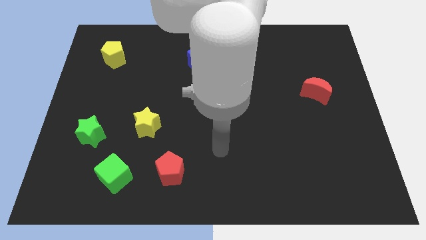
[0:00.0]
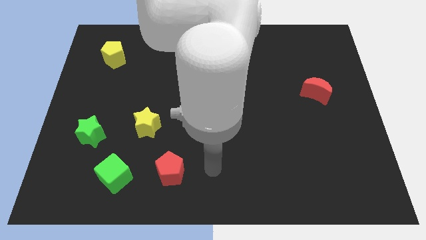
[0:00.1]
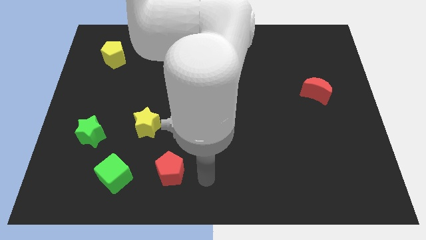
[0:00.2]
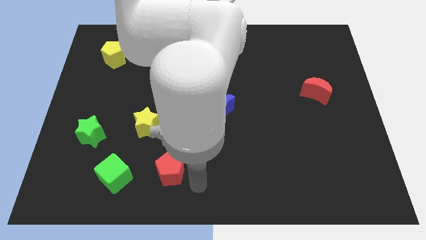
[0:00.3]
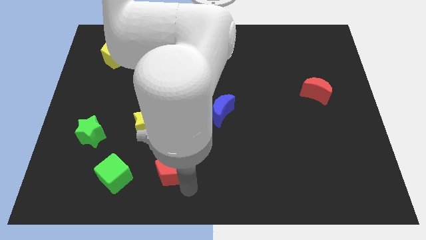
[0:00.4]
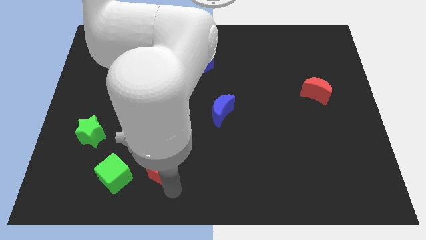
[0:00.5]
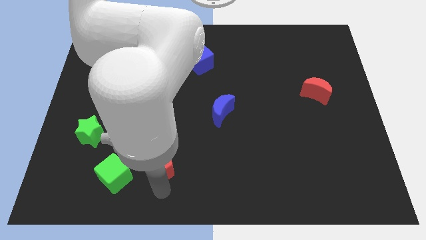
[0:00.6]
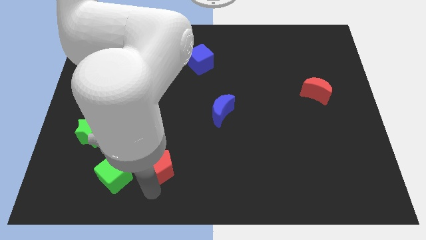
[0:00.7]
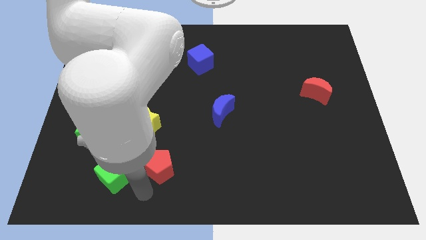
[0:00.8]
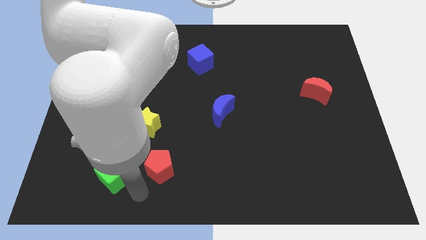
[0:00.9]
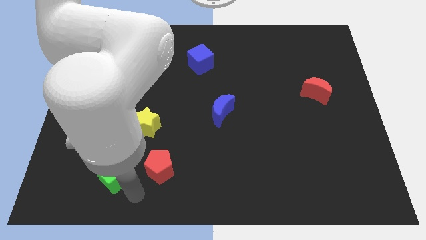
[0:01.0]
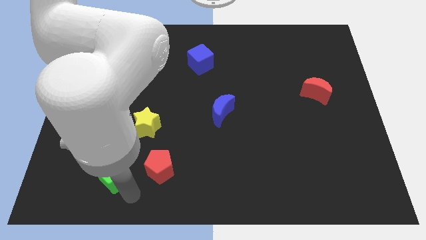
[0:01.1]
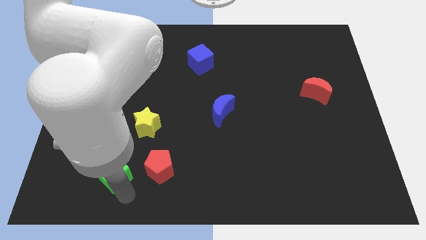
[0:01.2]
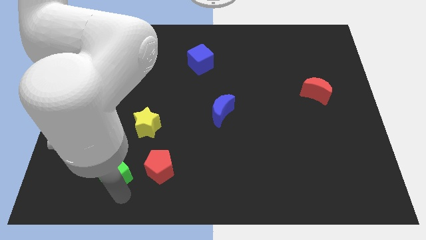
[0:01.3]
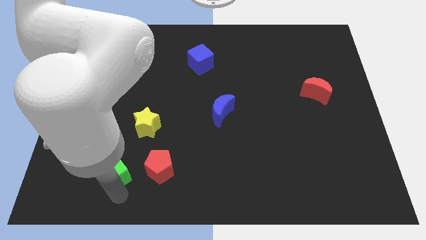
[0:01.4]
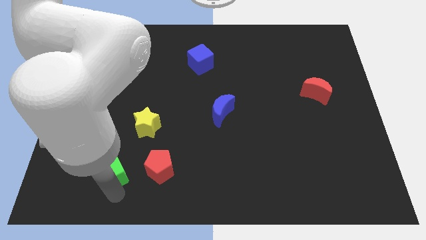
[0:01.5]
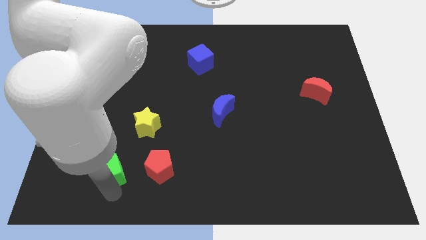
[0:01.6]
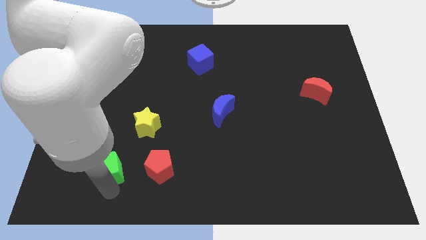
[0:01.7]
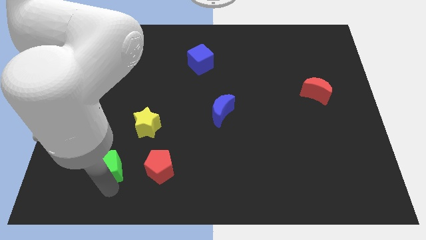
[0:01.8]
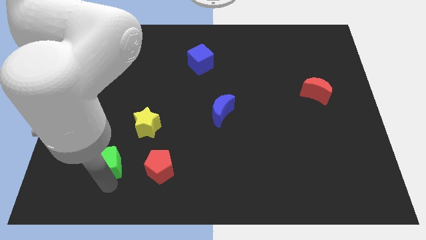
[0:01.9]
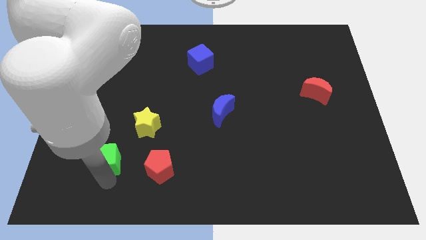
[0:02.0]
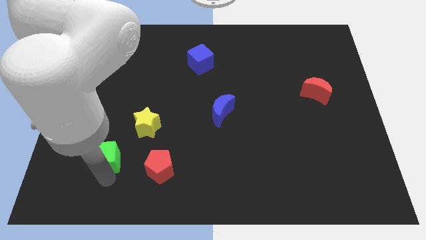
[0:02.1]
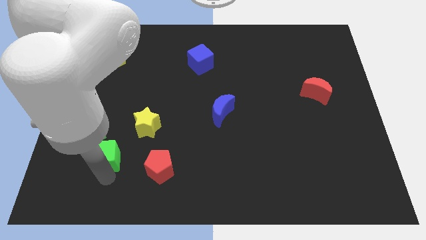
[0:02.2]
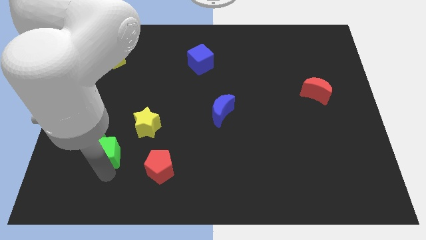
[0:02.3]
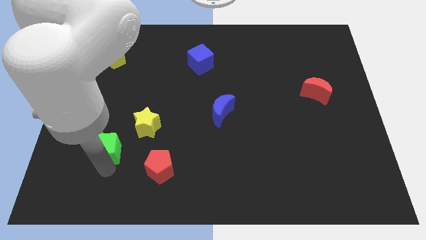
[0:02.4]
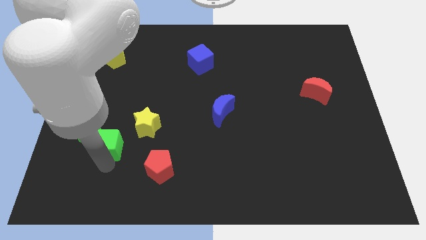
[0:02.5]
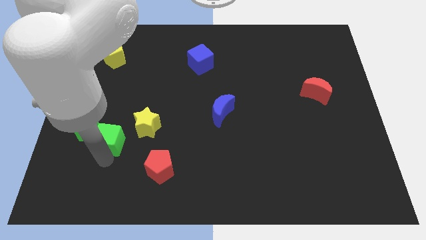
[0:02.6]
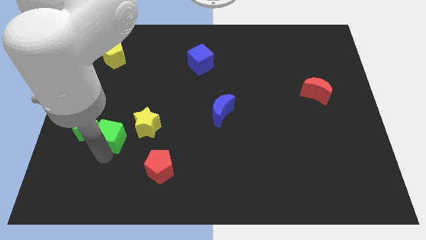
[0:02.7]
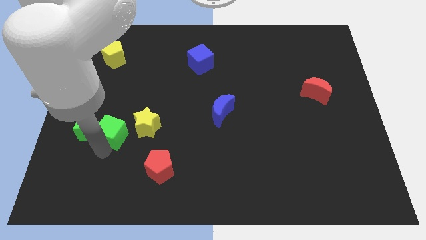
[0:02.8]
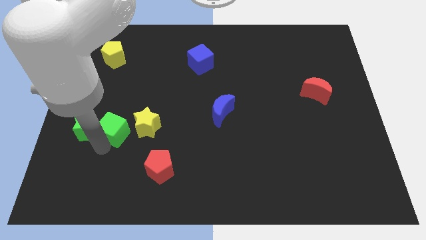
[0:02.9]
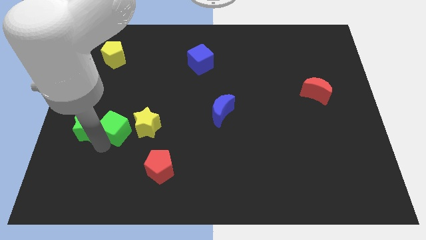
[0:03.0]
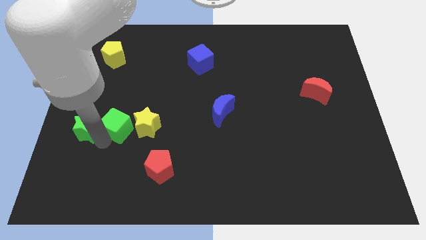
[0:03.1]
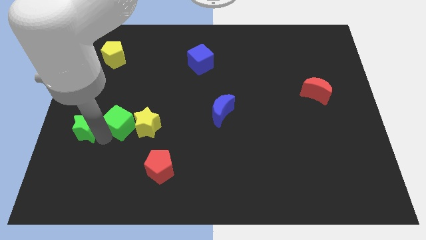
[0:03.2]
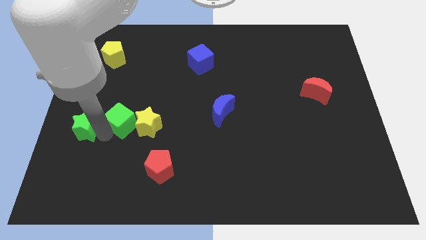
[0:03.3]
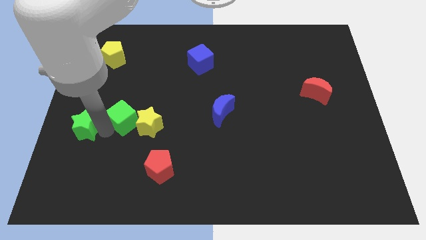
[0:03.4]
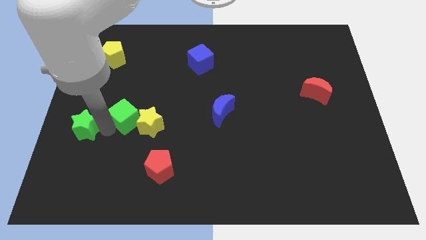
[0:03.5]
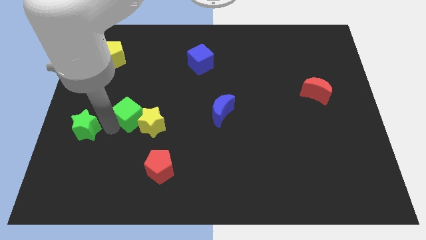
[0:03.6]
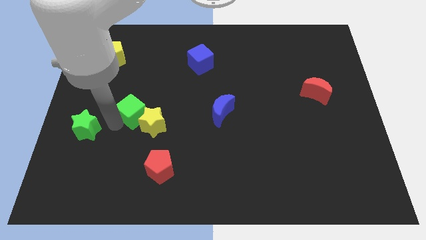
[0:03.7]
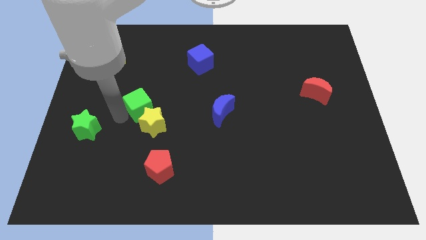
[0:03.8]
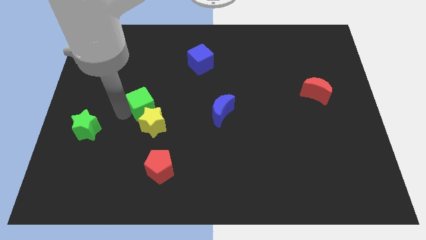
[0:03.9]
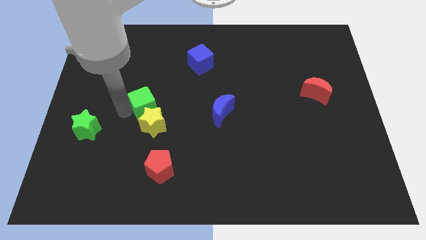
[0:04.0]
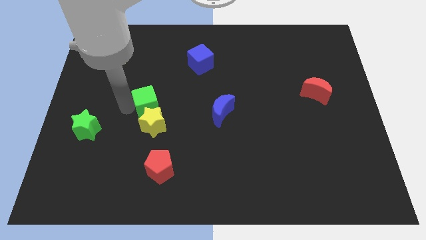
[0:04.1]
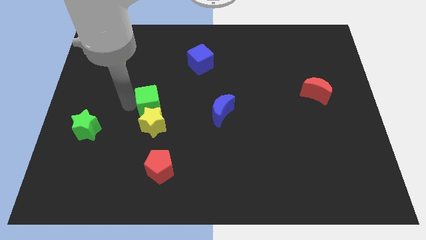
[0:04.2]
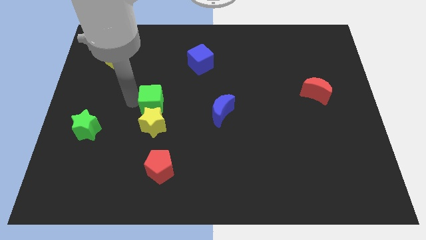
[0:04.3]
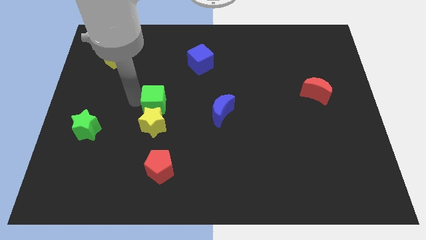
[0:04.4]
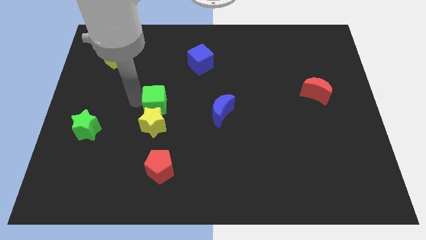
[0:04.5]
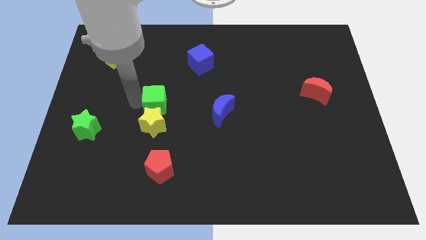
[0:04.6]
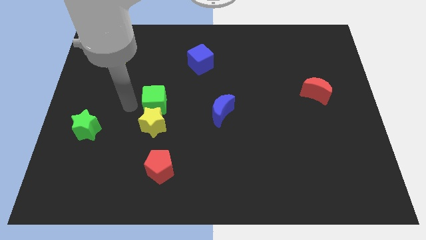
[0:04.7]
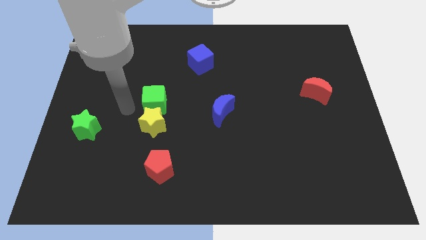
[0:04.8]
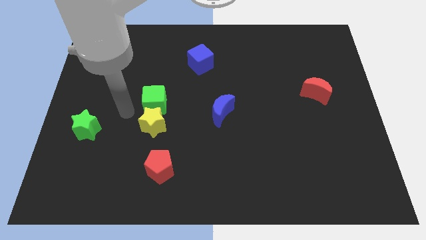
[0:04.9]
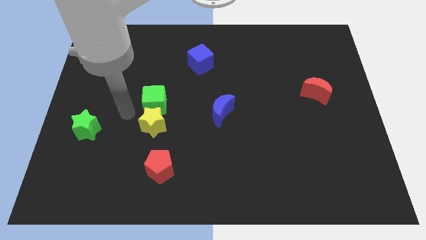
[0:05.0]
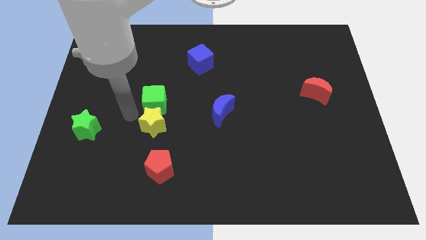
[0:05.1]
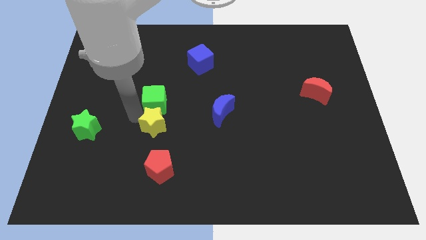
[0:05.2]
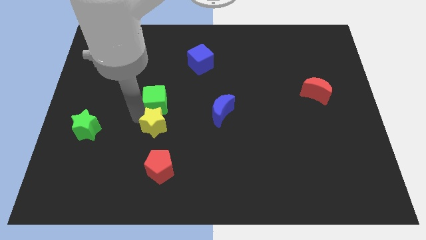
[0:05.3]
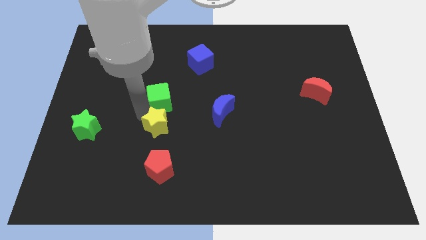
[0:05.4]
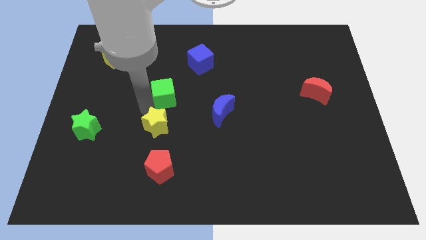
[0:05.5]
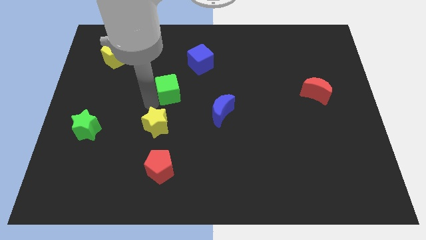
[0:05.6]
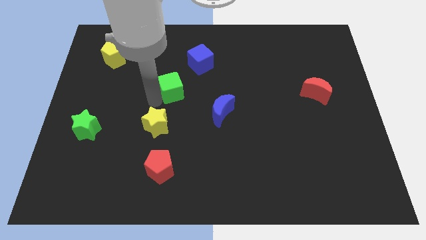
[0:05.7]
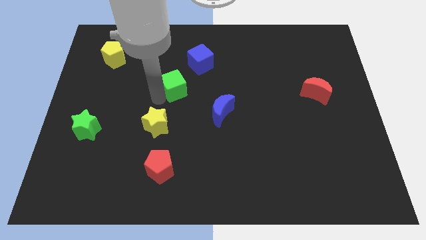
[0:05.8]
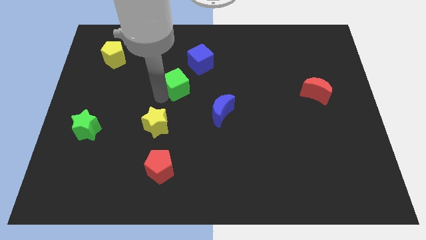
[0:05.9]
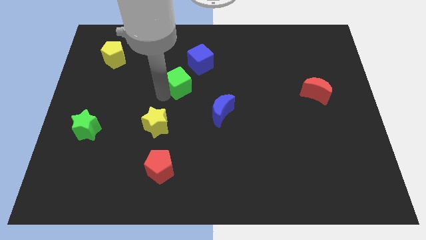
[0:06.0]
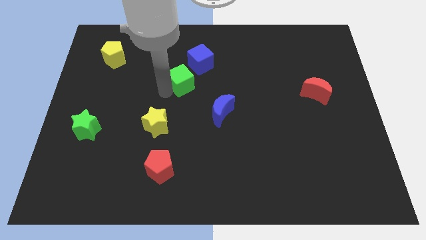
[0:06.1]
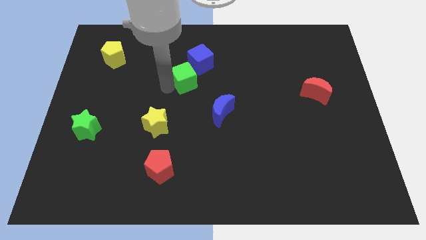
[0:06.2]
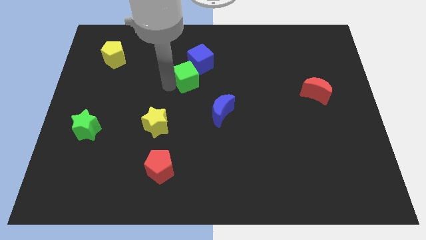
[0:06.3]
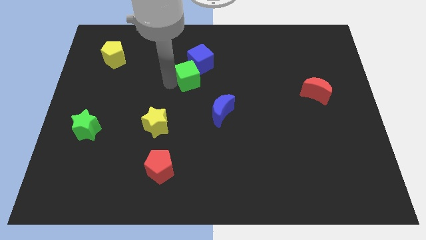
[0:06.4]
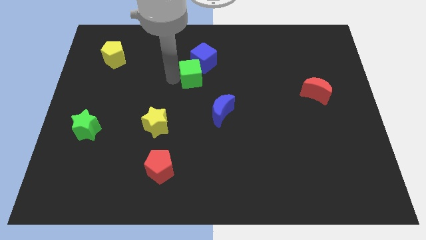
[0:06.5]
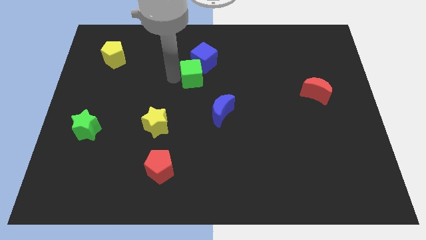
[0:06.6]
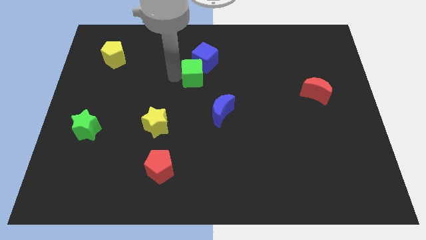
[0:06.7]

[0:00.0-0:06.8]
move the green cube towards the blue cube

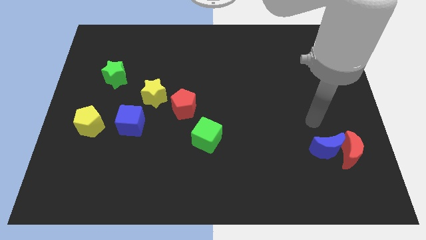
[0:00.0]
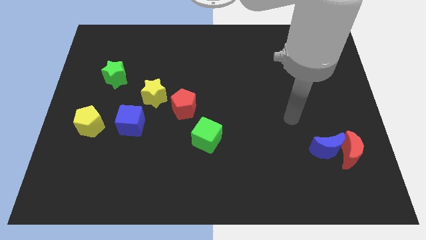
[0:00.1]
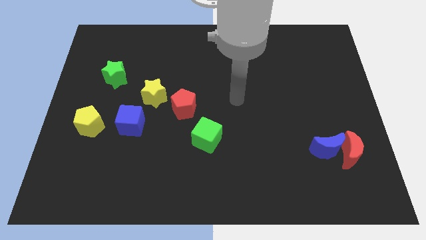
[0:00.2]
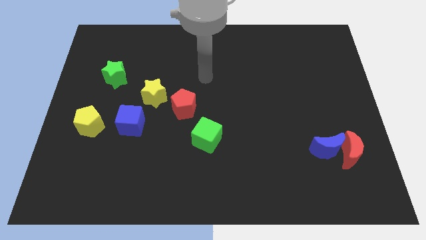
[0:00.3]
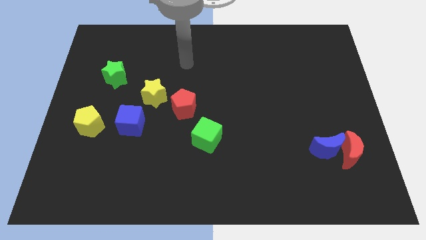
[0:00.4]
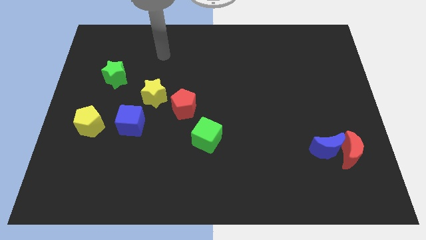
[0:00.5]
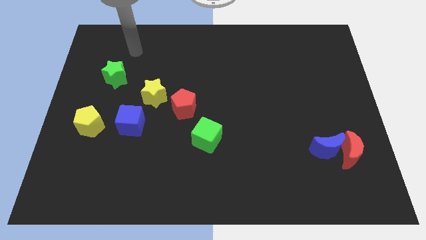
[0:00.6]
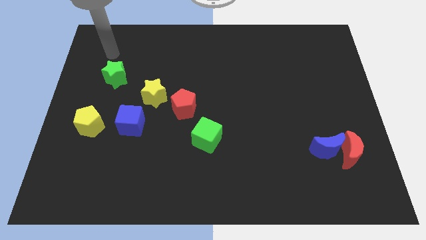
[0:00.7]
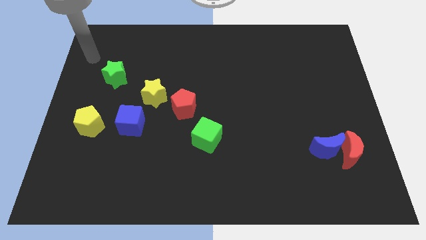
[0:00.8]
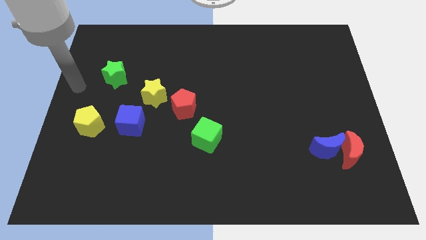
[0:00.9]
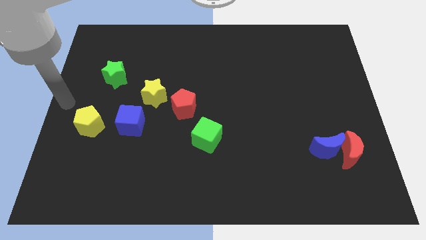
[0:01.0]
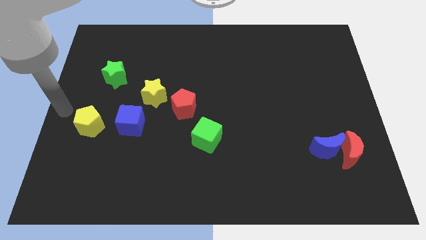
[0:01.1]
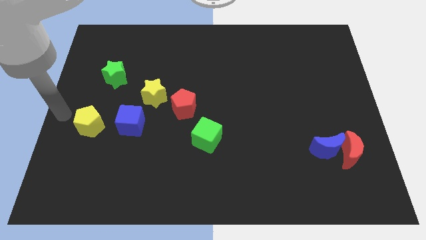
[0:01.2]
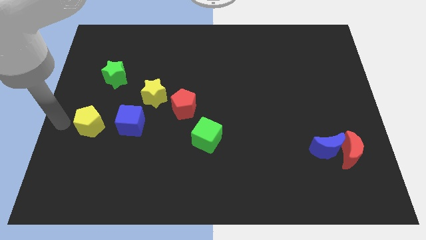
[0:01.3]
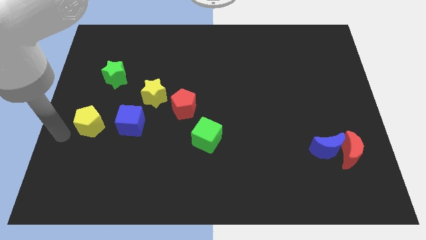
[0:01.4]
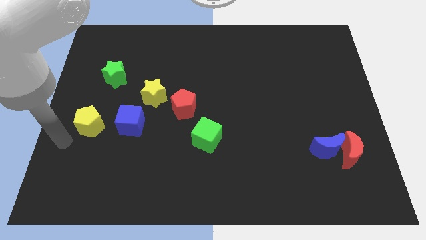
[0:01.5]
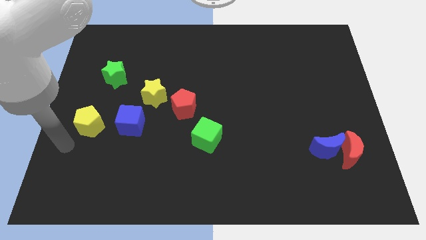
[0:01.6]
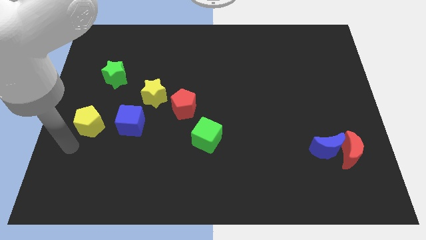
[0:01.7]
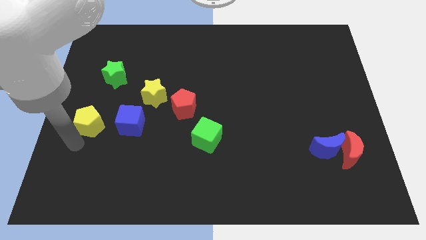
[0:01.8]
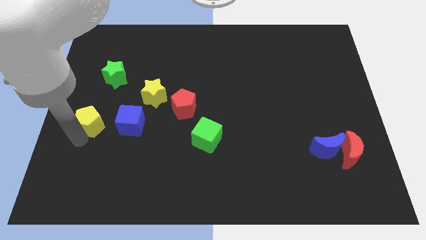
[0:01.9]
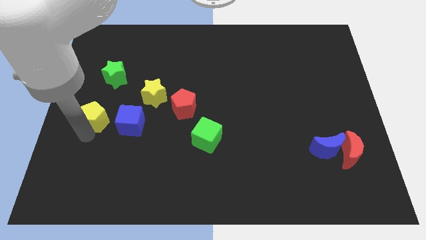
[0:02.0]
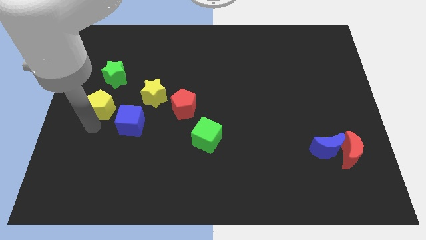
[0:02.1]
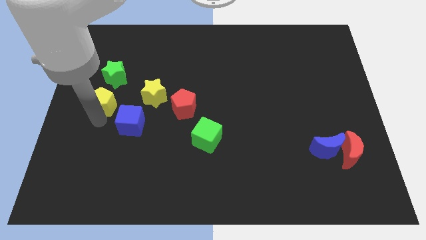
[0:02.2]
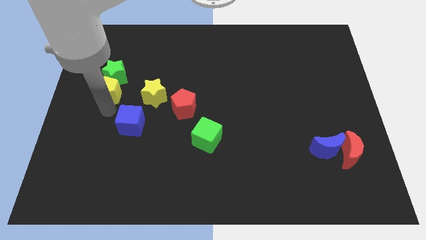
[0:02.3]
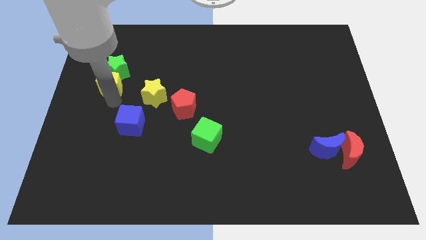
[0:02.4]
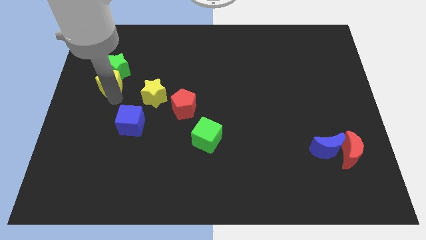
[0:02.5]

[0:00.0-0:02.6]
slide the yellow pentagon towards the green star
